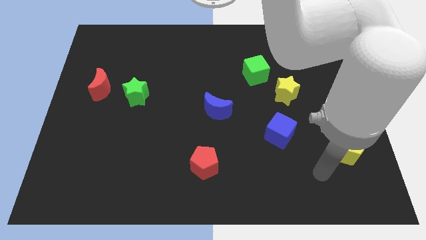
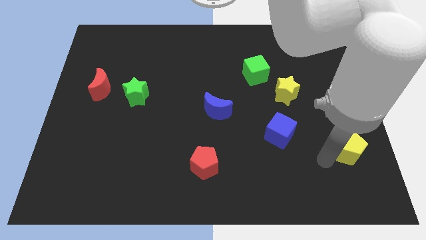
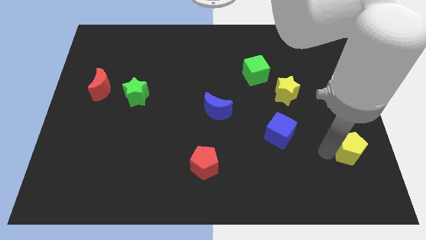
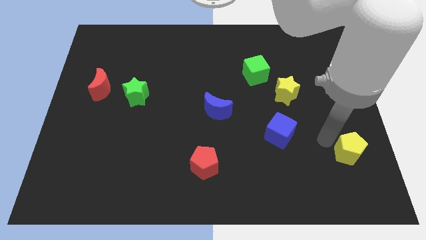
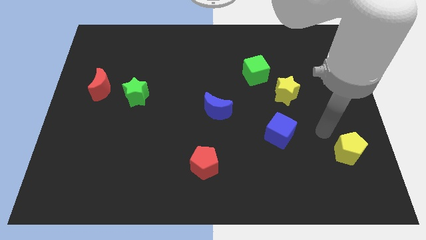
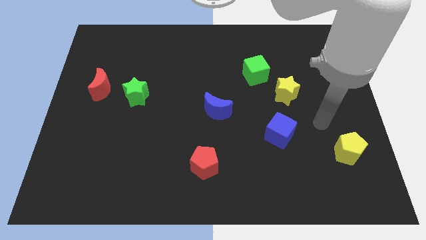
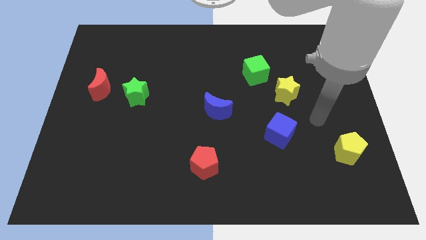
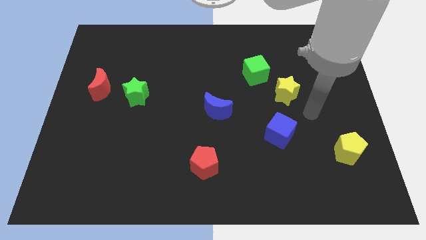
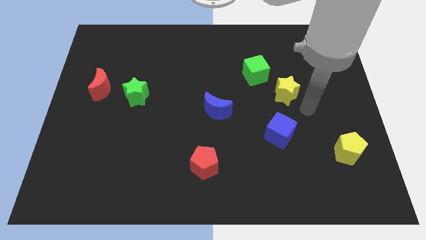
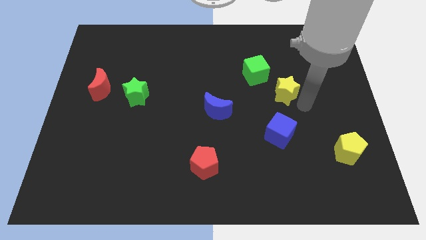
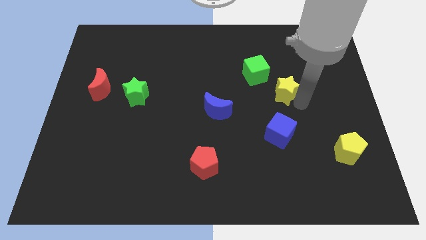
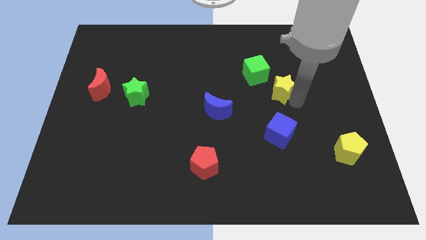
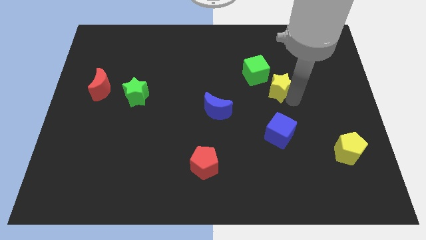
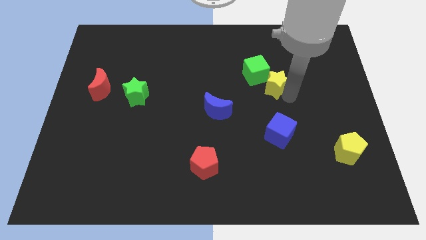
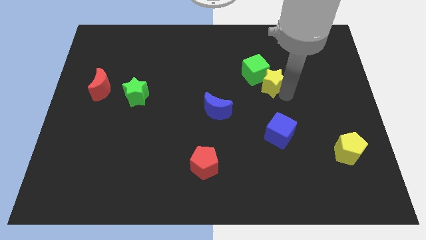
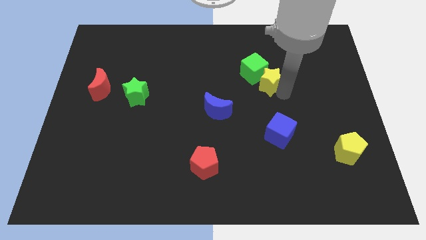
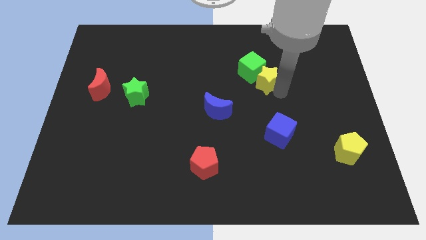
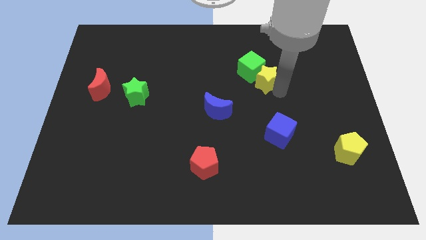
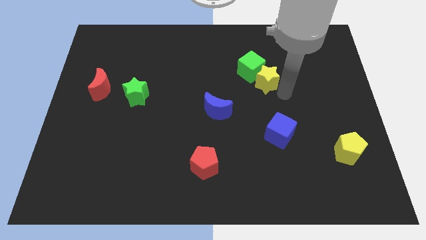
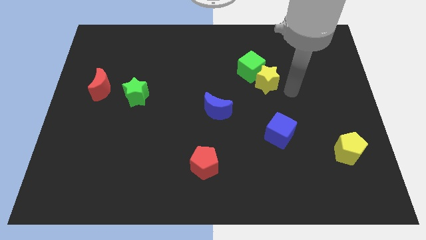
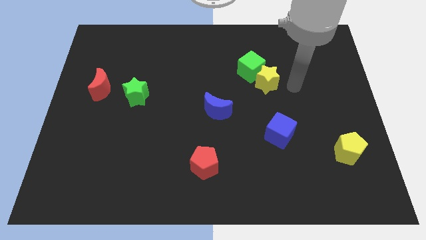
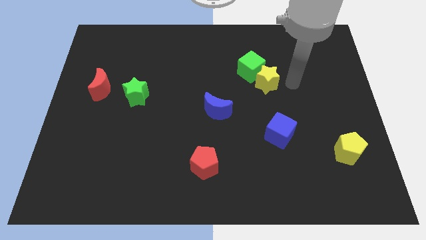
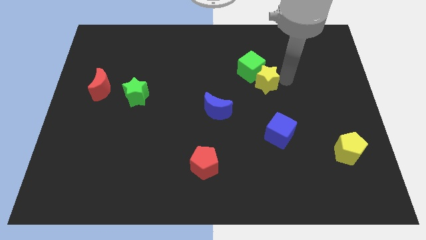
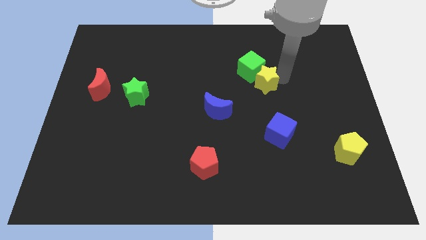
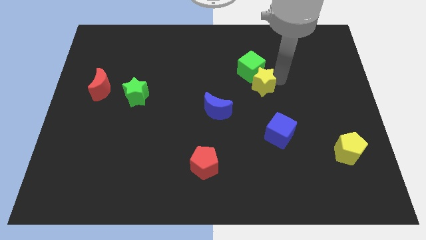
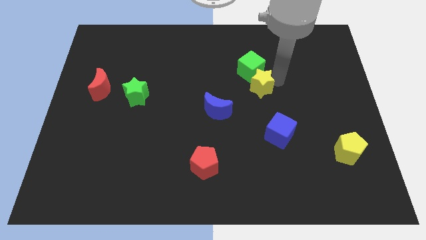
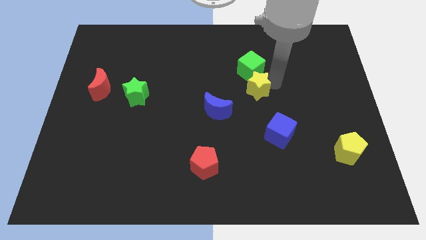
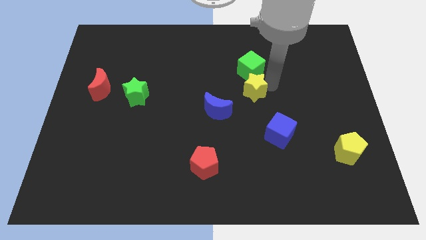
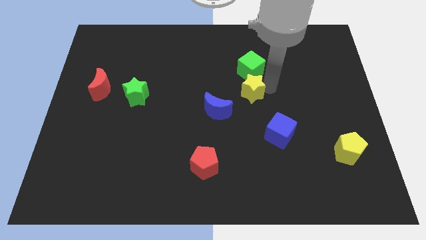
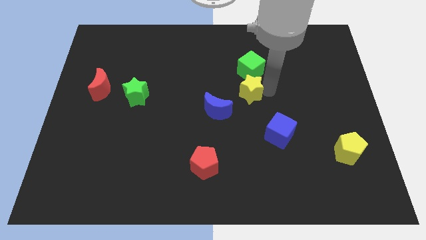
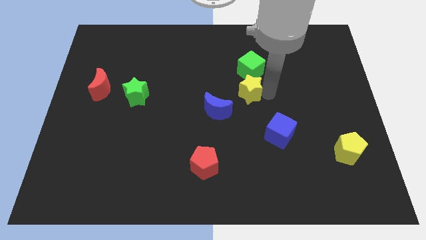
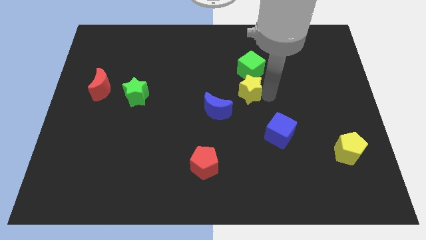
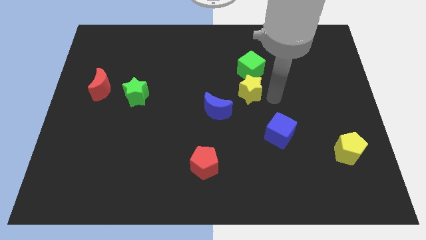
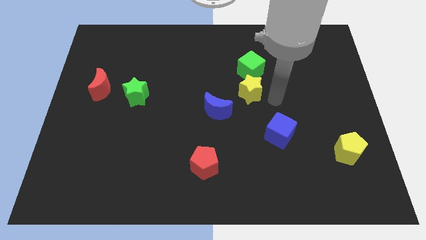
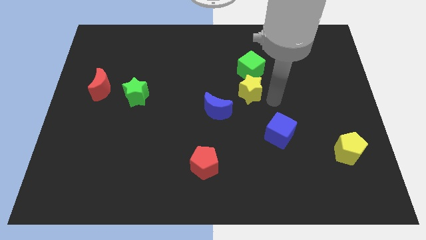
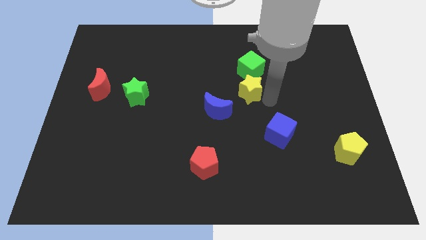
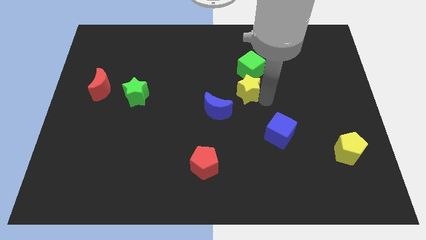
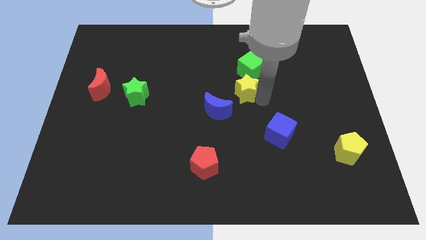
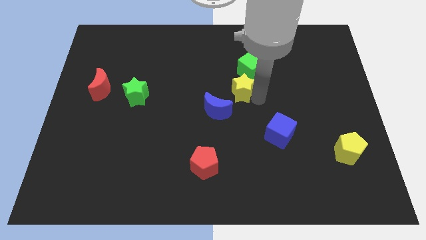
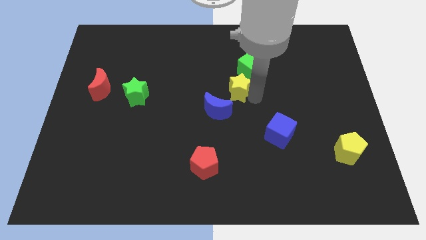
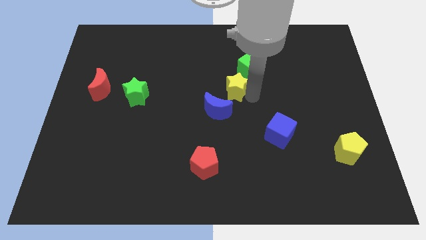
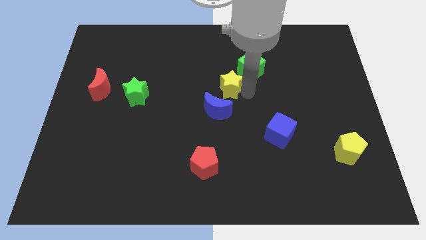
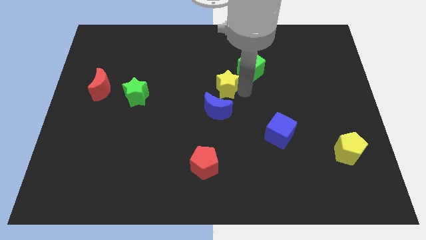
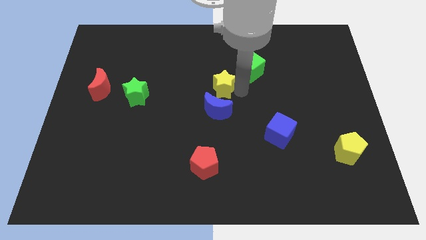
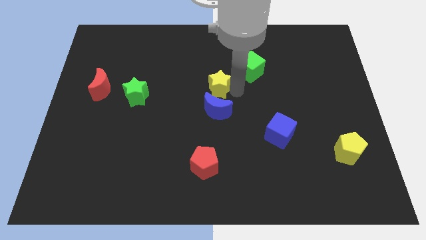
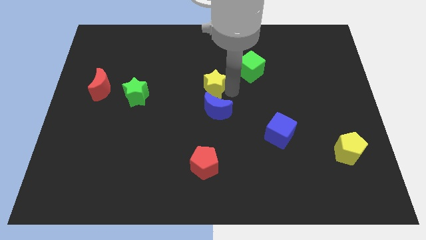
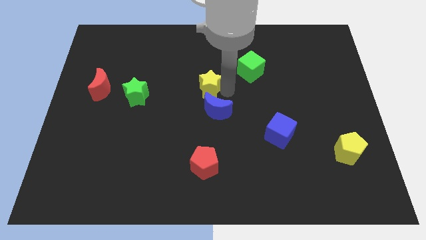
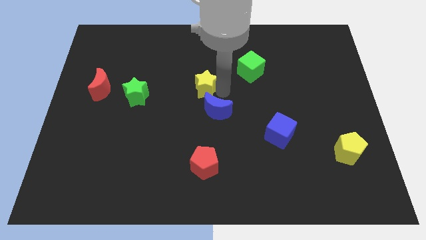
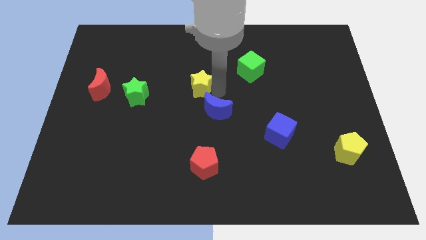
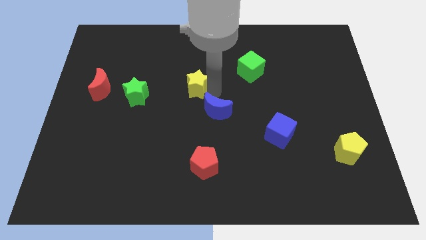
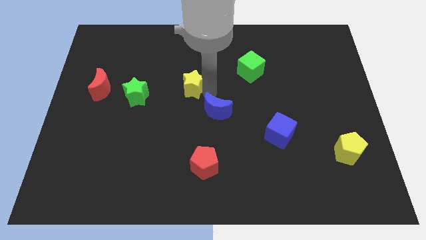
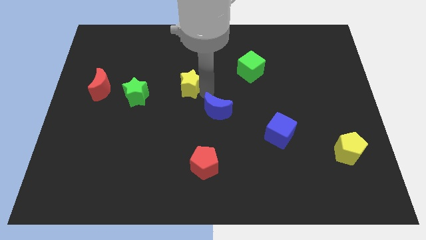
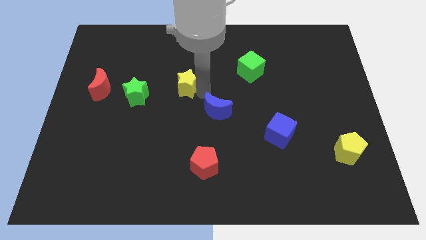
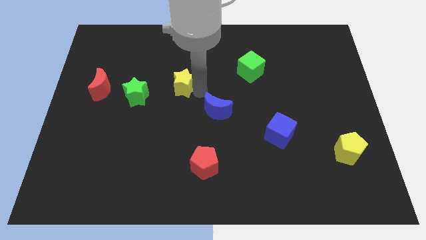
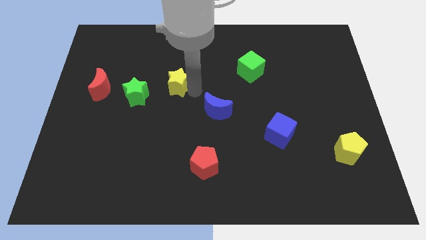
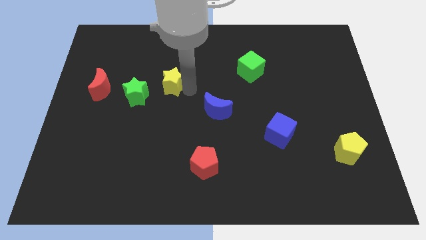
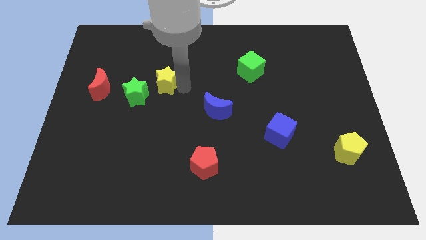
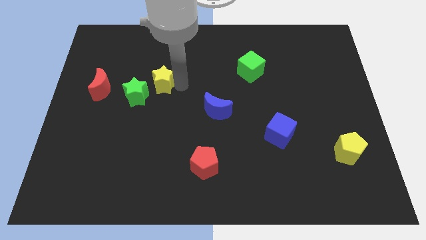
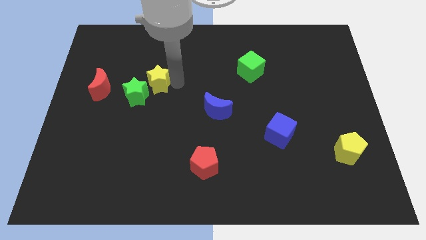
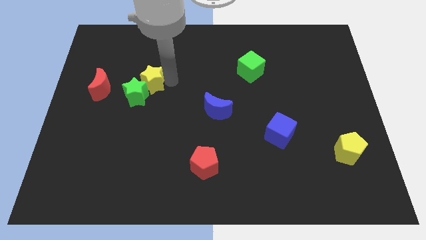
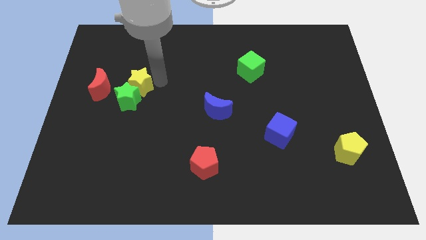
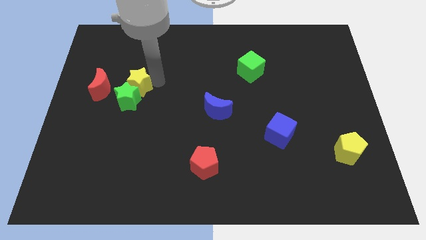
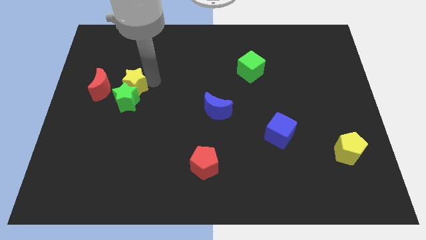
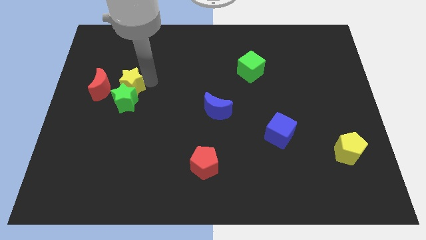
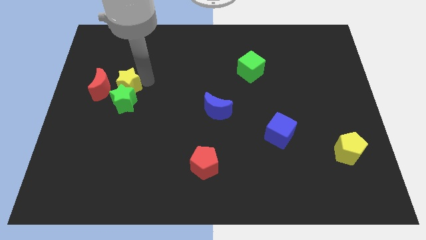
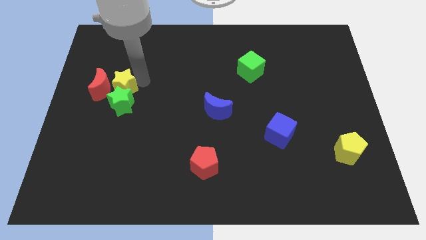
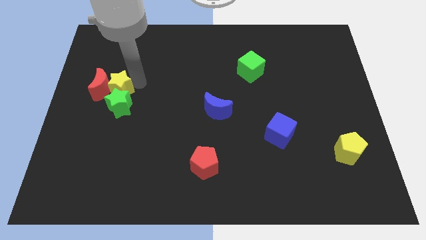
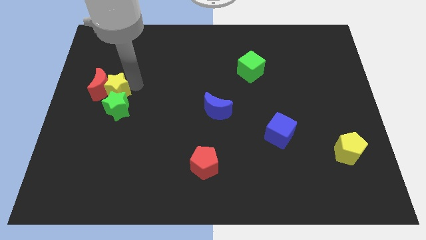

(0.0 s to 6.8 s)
move the yellow star next to the red moon

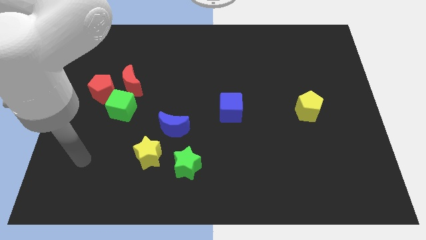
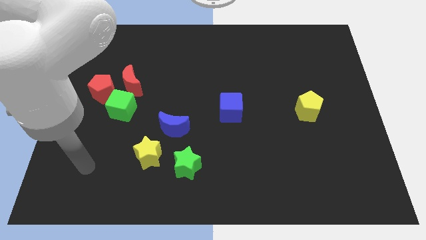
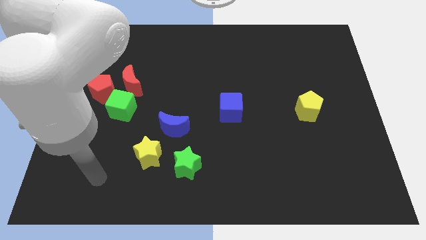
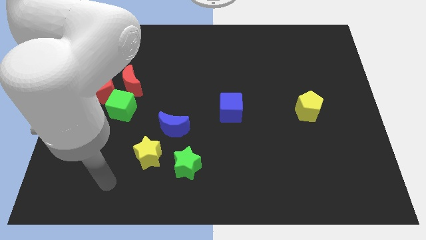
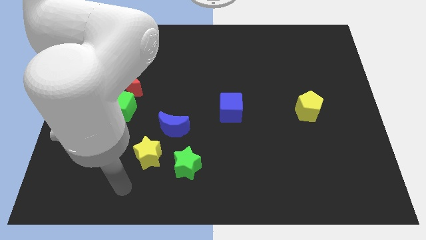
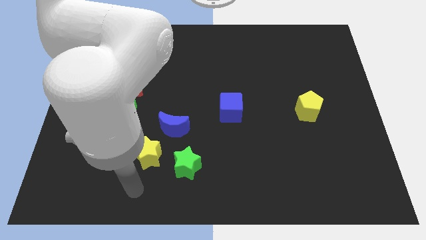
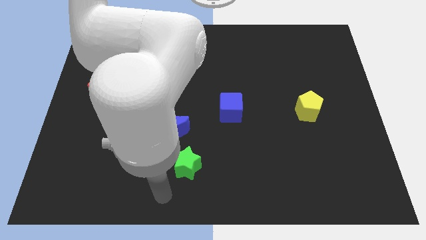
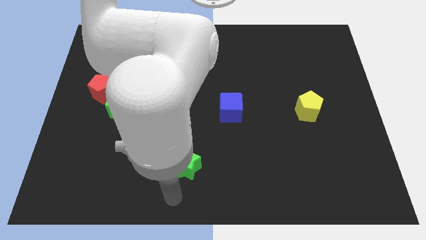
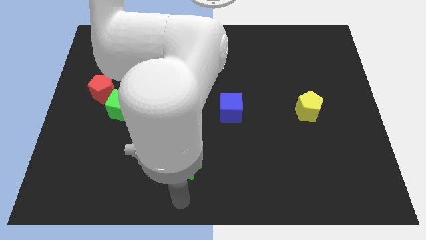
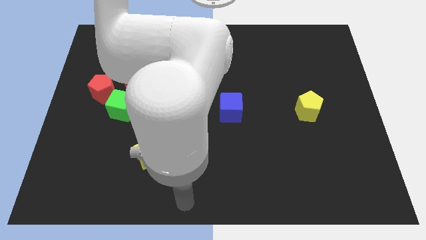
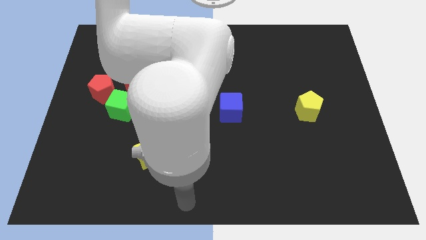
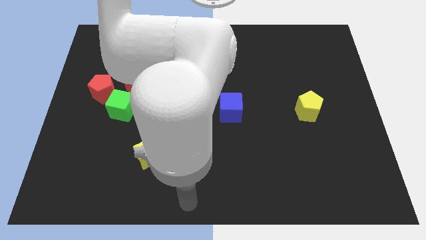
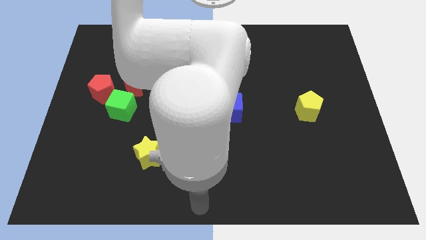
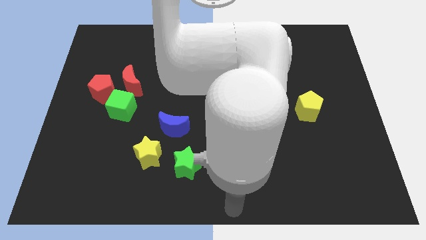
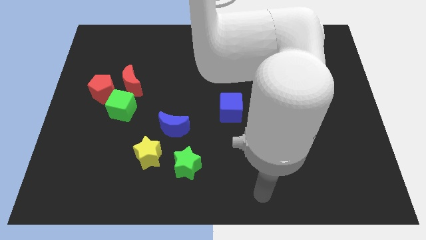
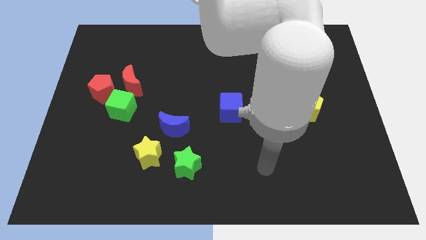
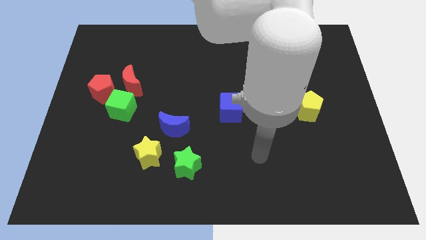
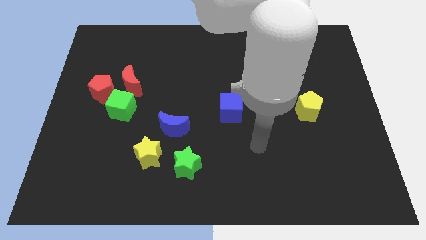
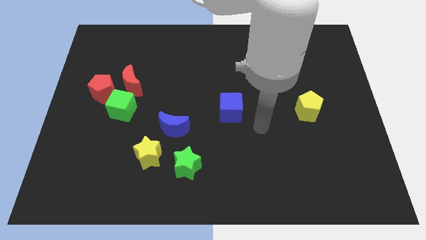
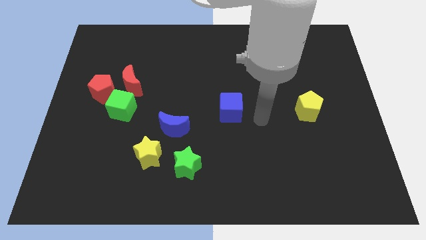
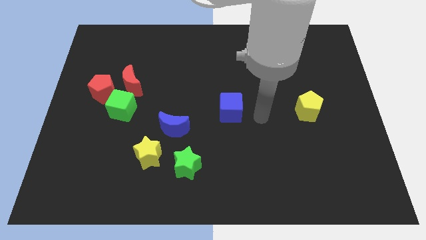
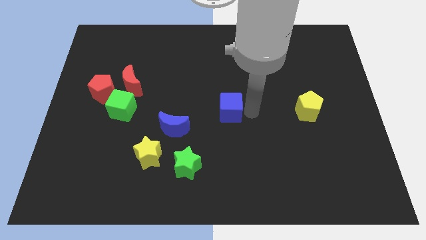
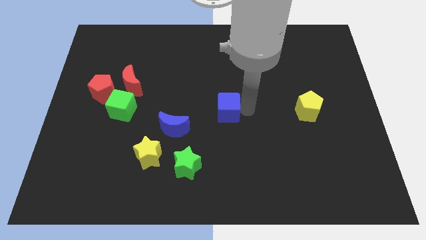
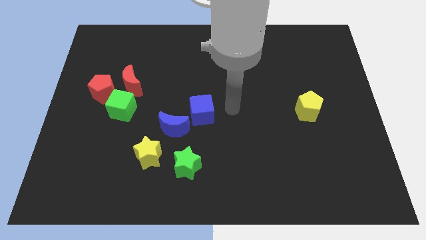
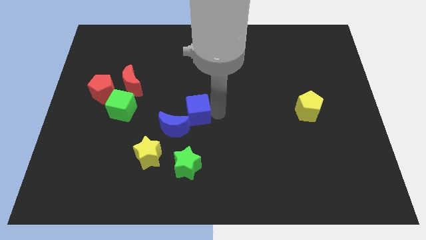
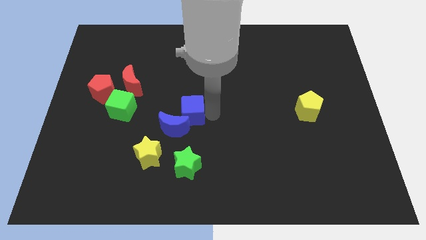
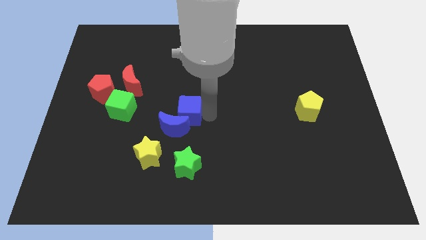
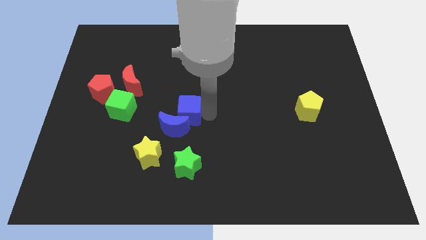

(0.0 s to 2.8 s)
move the blue cube to the blue moon
